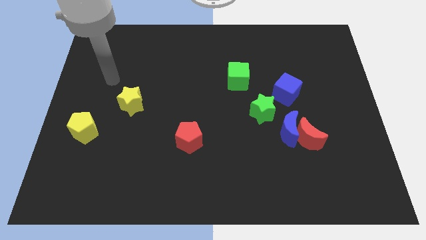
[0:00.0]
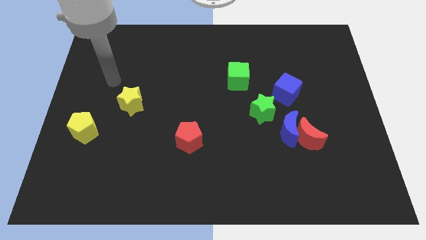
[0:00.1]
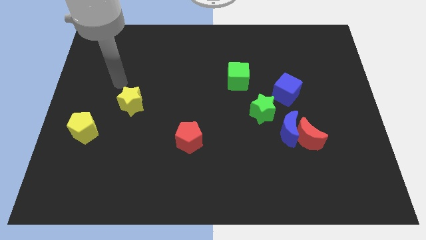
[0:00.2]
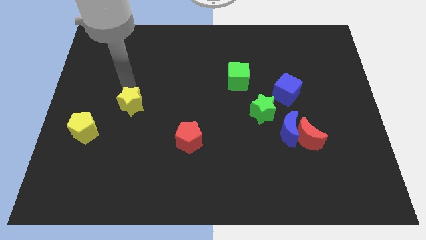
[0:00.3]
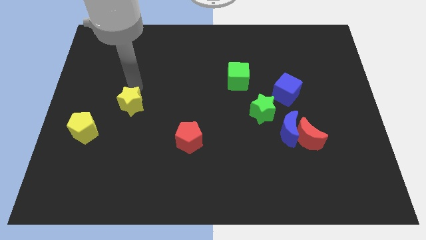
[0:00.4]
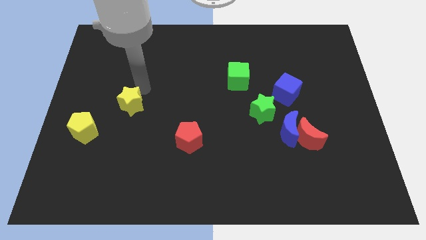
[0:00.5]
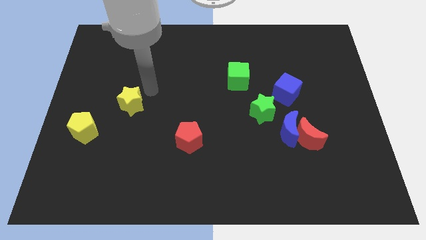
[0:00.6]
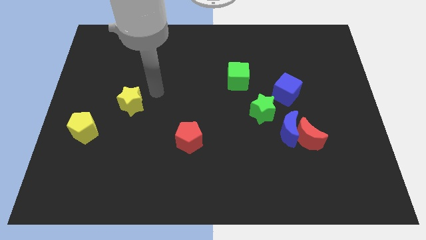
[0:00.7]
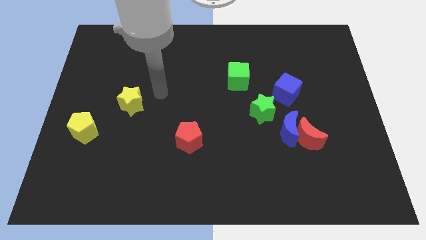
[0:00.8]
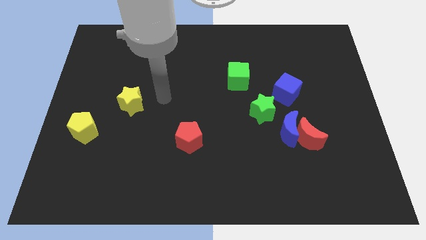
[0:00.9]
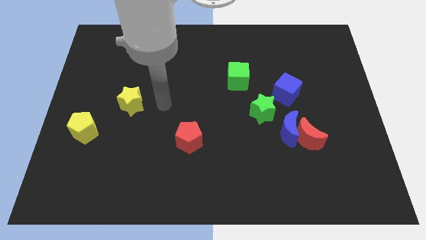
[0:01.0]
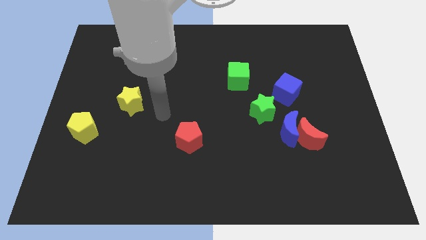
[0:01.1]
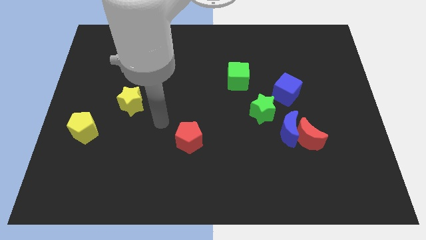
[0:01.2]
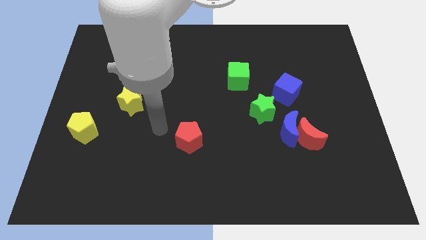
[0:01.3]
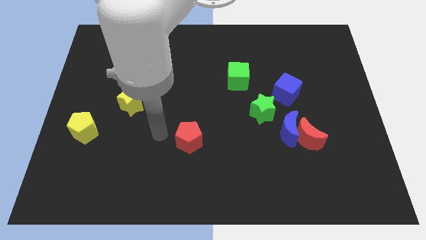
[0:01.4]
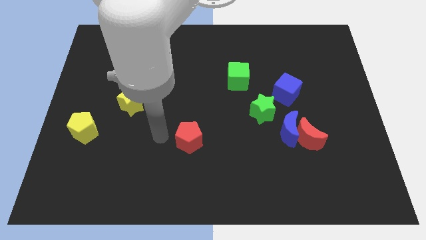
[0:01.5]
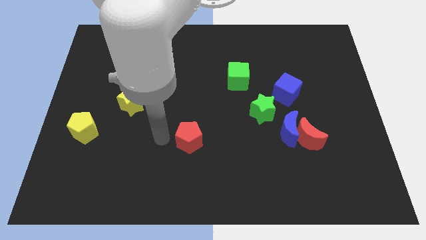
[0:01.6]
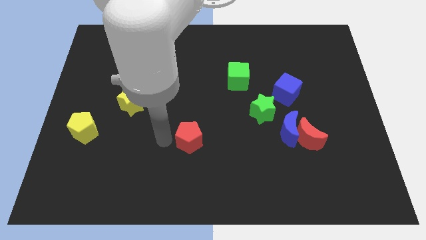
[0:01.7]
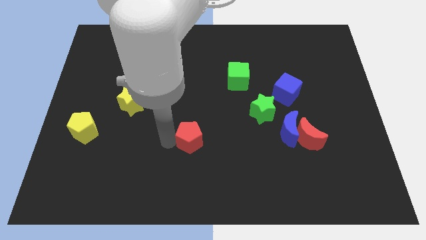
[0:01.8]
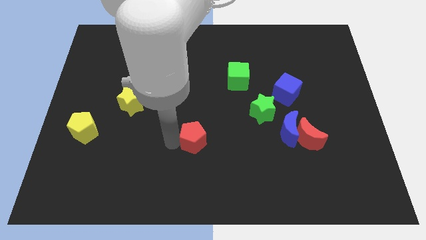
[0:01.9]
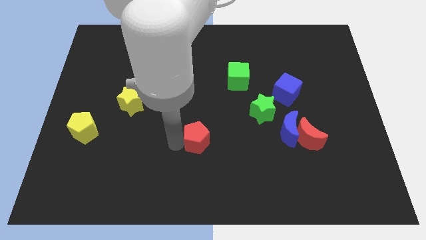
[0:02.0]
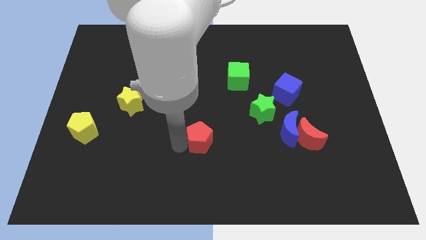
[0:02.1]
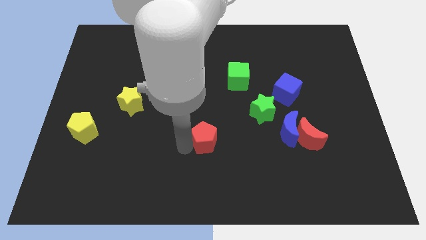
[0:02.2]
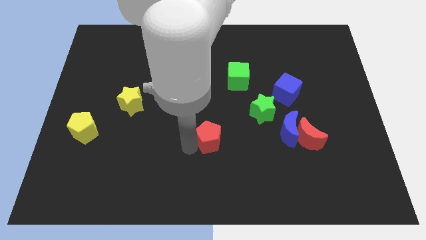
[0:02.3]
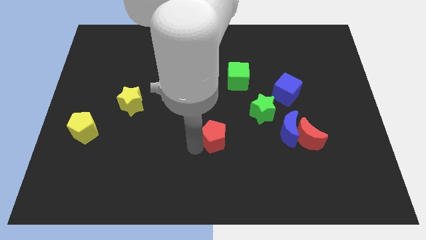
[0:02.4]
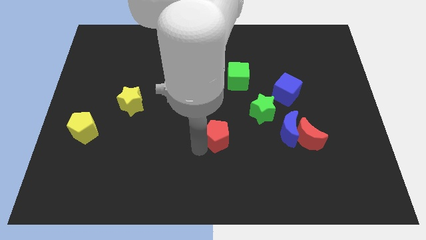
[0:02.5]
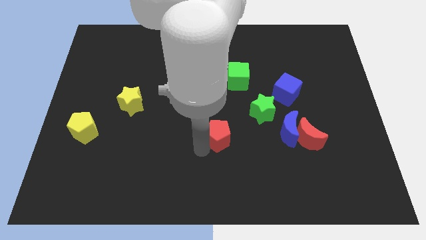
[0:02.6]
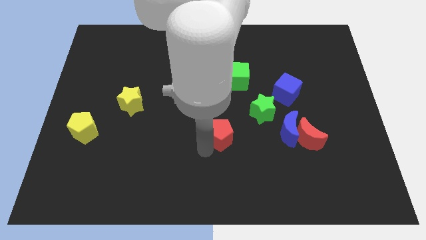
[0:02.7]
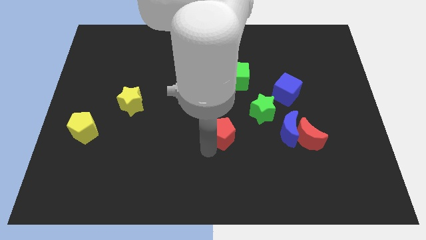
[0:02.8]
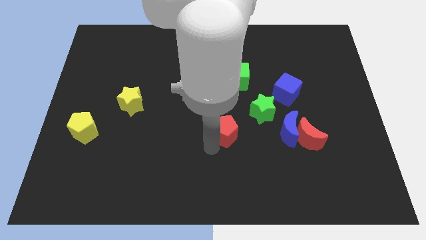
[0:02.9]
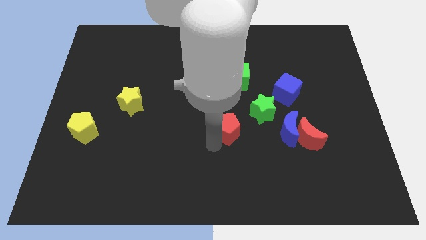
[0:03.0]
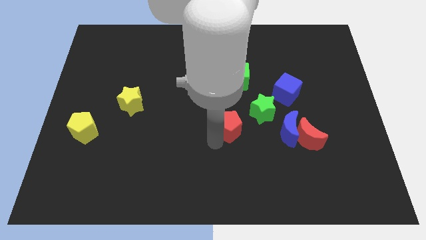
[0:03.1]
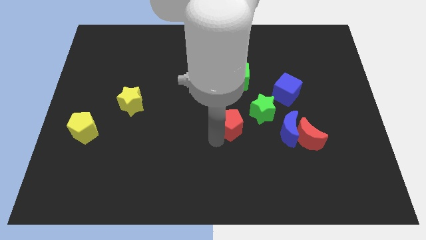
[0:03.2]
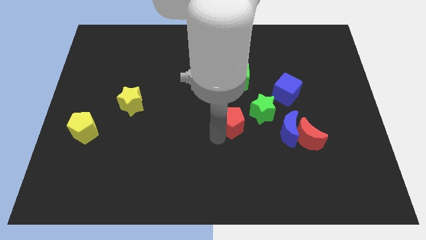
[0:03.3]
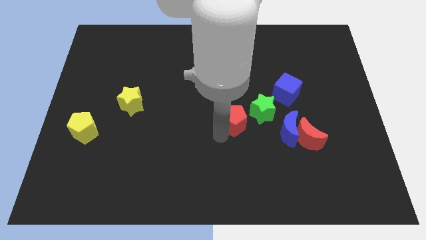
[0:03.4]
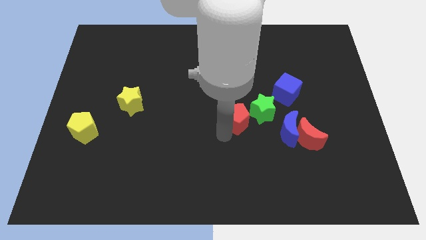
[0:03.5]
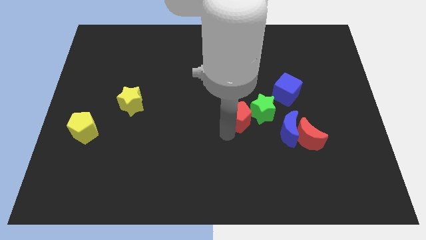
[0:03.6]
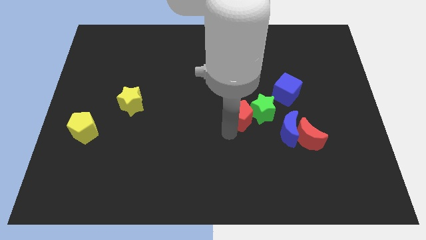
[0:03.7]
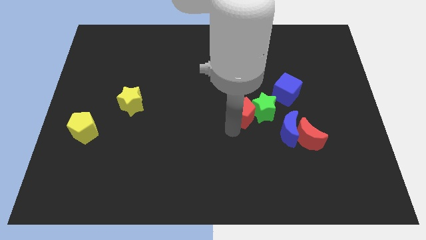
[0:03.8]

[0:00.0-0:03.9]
slide the red pentagon close to the green star

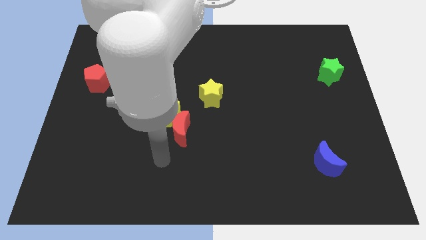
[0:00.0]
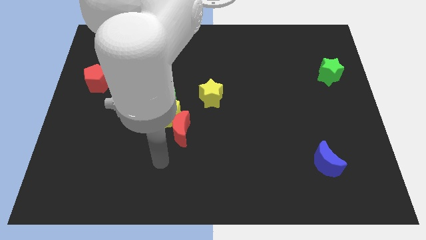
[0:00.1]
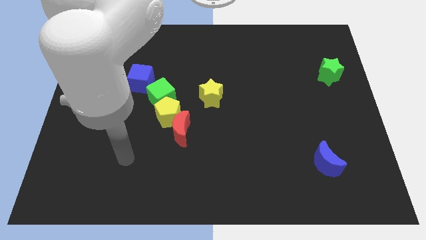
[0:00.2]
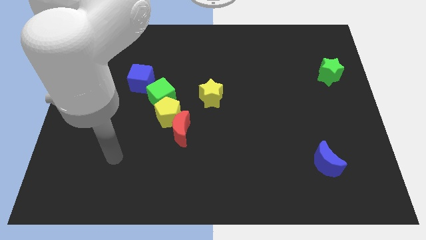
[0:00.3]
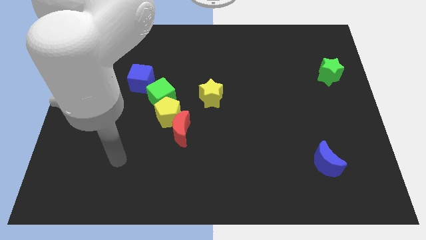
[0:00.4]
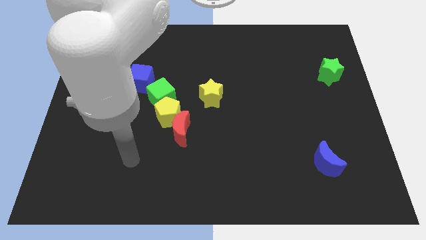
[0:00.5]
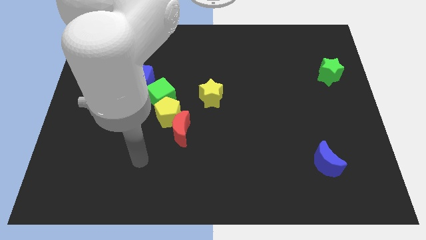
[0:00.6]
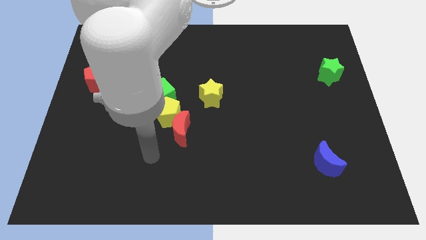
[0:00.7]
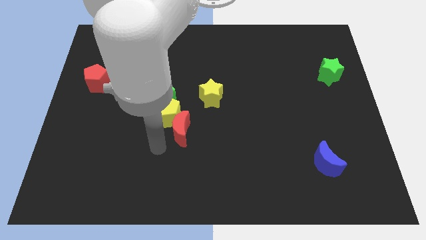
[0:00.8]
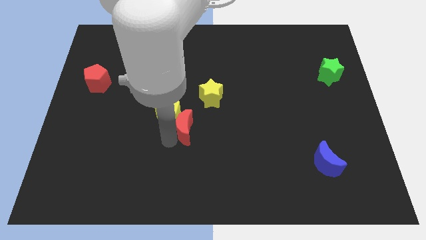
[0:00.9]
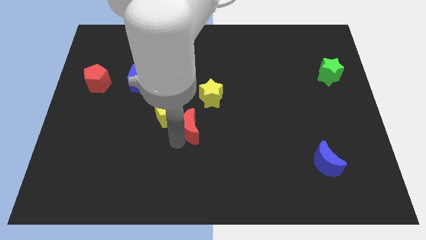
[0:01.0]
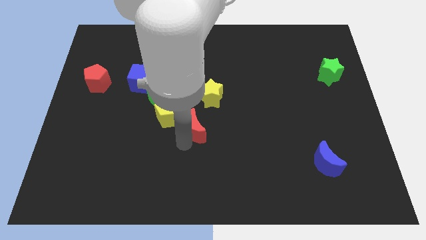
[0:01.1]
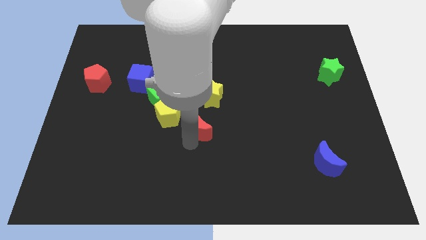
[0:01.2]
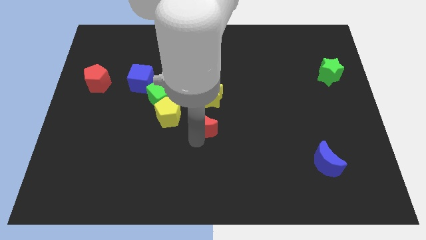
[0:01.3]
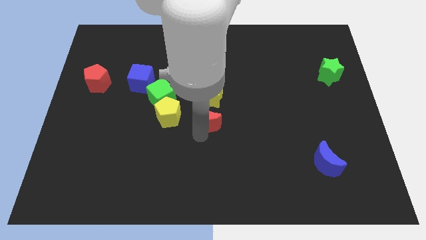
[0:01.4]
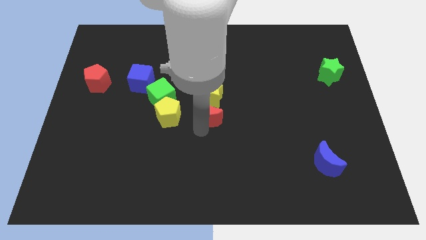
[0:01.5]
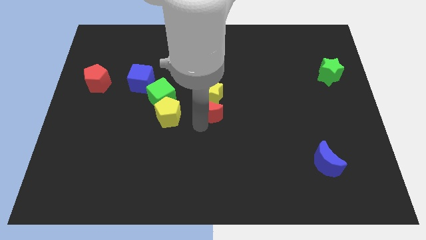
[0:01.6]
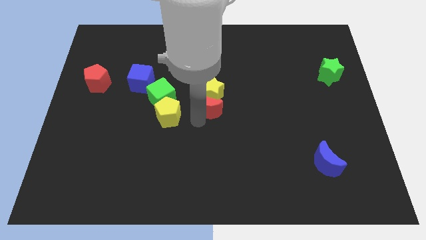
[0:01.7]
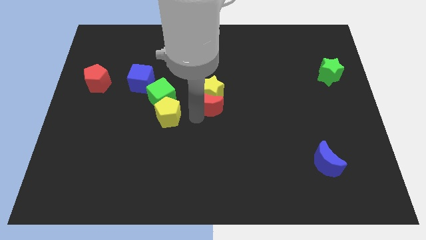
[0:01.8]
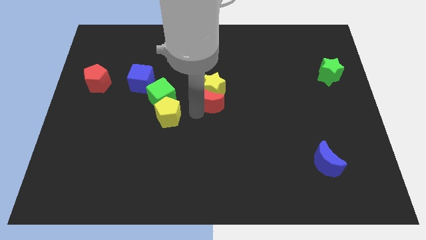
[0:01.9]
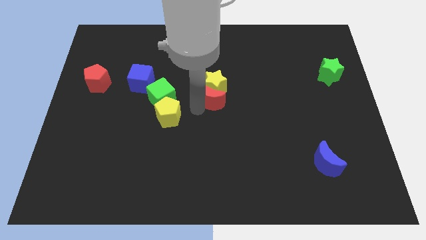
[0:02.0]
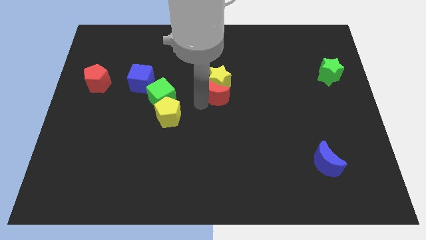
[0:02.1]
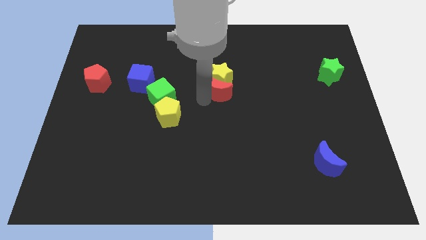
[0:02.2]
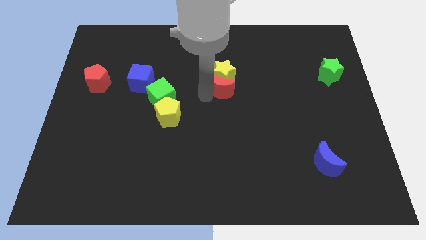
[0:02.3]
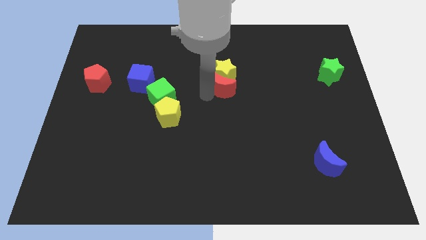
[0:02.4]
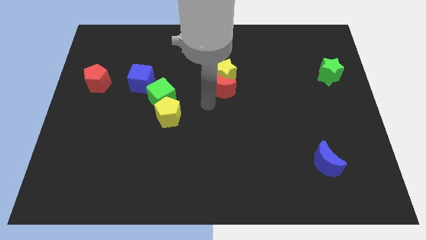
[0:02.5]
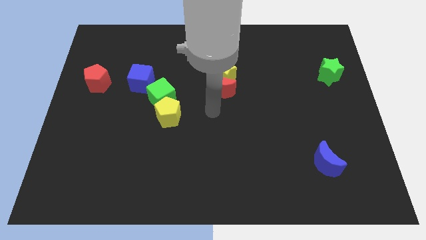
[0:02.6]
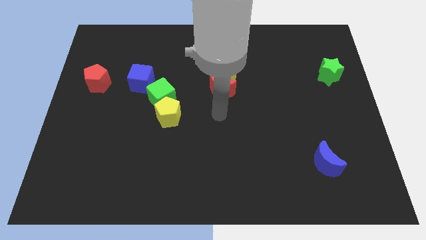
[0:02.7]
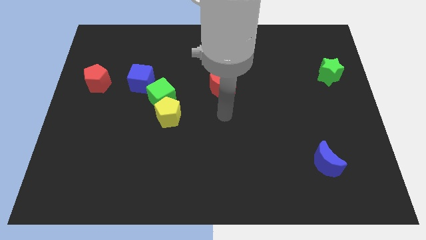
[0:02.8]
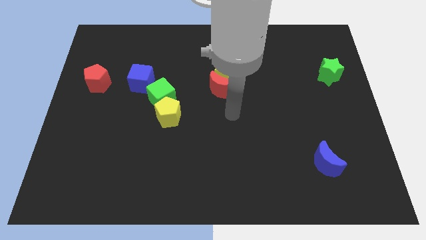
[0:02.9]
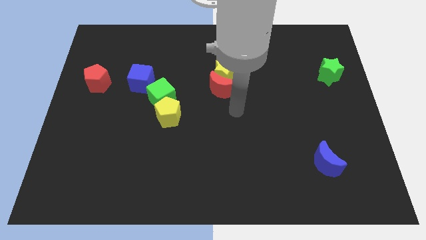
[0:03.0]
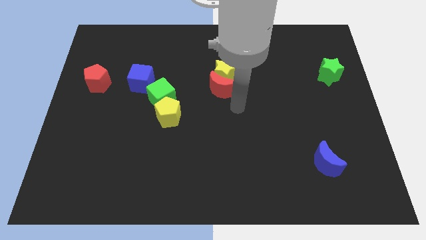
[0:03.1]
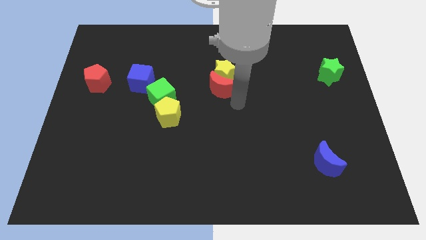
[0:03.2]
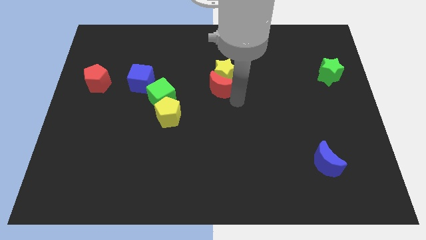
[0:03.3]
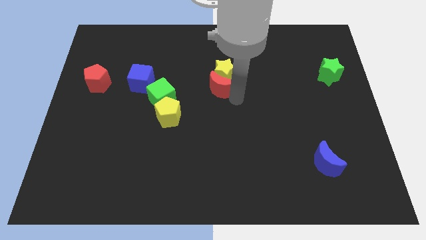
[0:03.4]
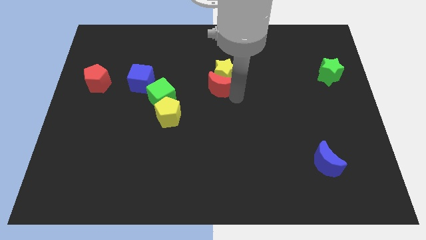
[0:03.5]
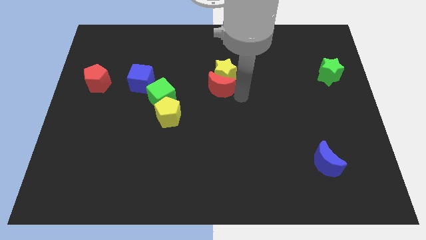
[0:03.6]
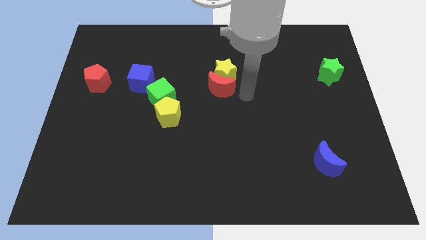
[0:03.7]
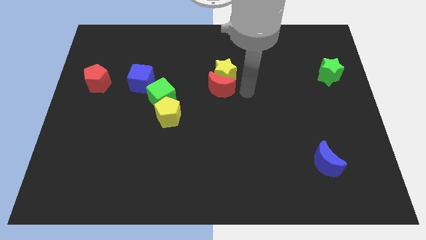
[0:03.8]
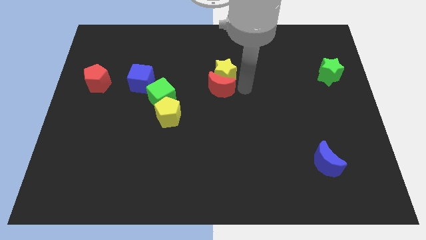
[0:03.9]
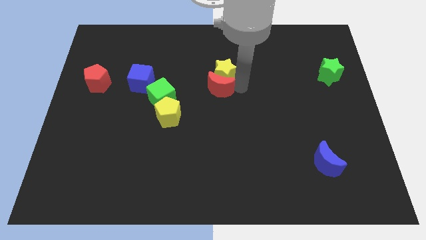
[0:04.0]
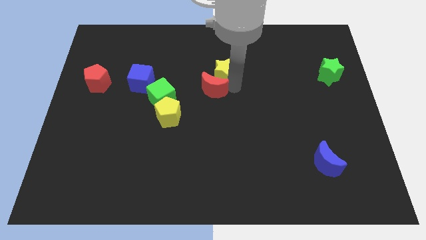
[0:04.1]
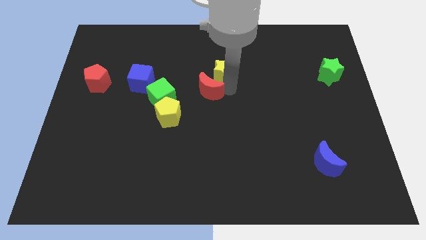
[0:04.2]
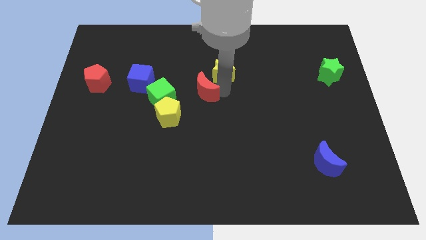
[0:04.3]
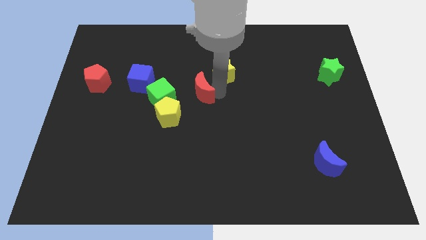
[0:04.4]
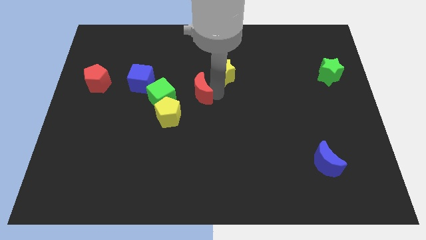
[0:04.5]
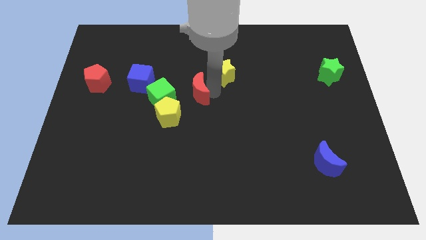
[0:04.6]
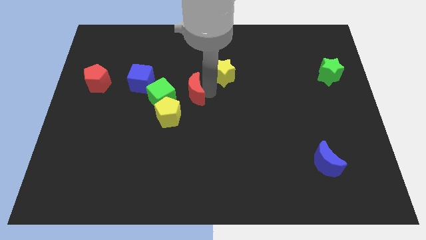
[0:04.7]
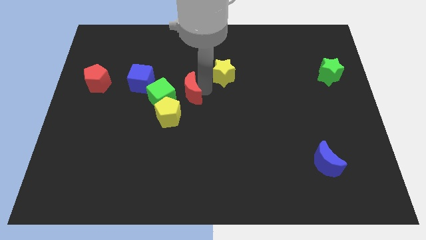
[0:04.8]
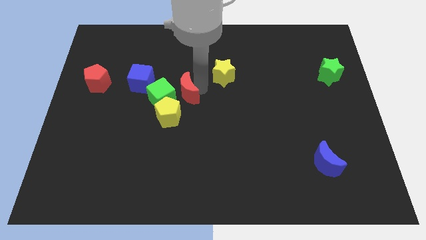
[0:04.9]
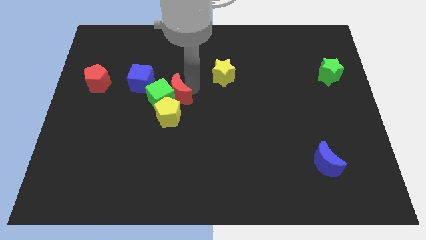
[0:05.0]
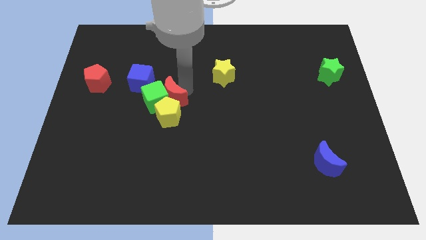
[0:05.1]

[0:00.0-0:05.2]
move the red moon to the green cube
